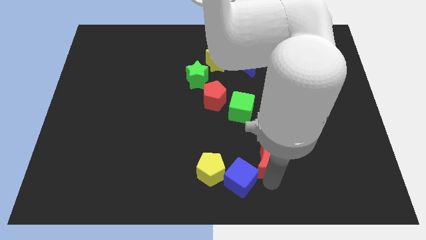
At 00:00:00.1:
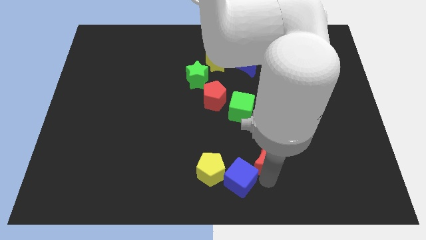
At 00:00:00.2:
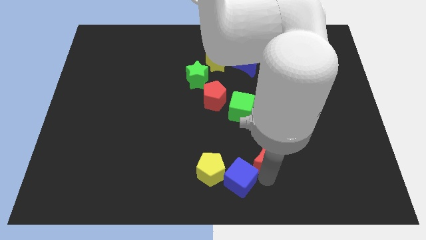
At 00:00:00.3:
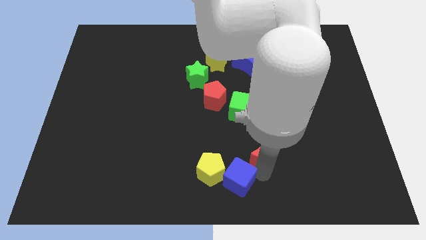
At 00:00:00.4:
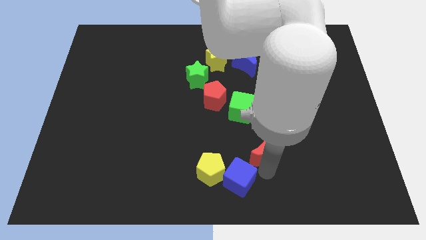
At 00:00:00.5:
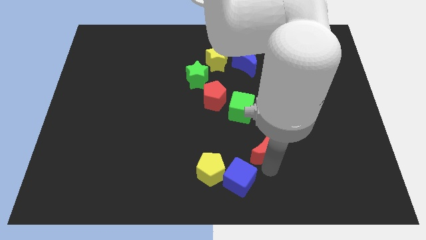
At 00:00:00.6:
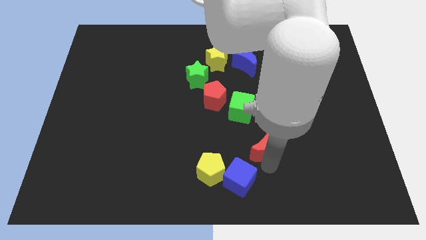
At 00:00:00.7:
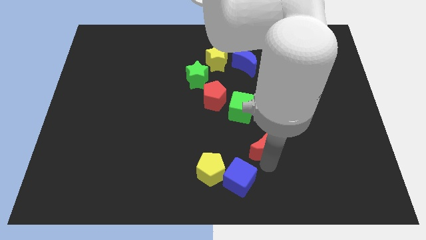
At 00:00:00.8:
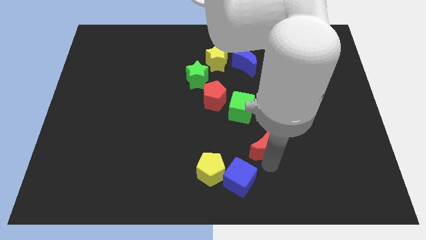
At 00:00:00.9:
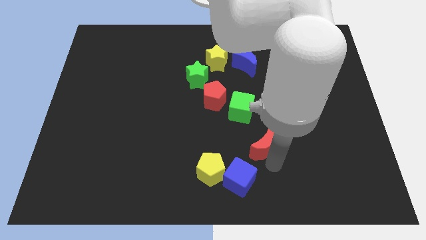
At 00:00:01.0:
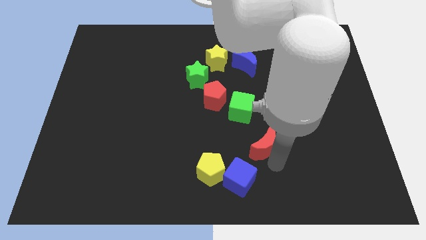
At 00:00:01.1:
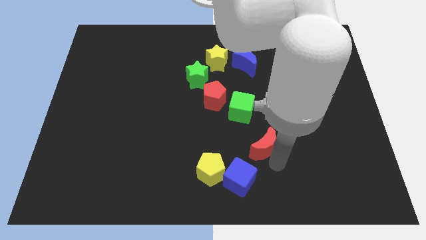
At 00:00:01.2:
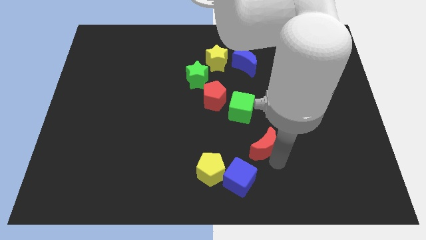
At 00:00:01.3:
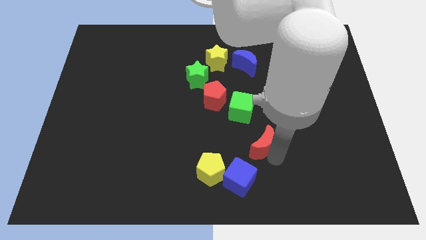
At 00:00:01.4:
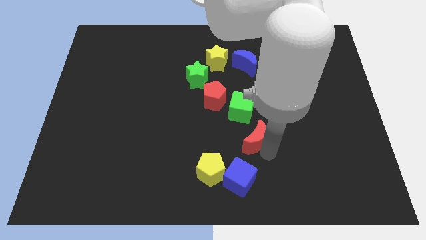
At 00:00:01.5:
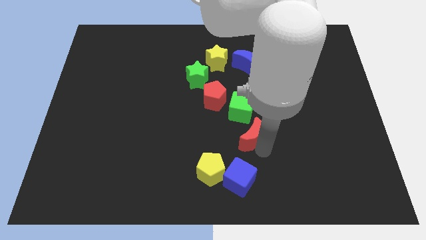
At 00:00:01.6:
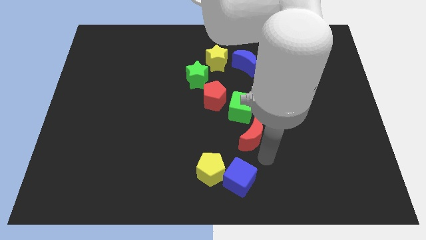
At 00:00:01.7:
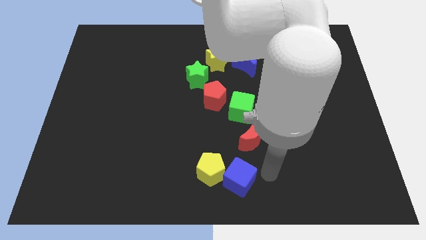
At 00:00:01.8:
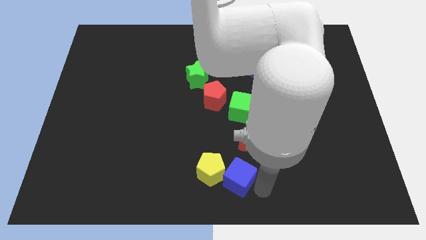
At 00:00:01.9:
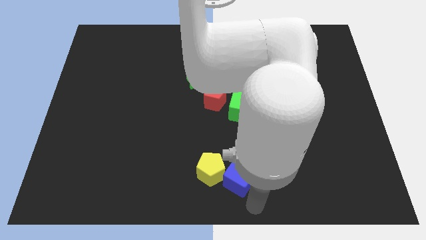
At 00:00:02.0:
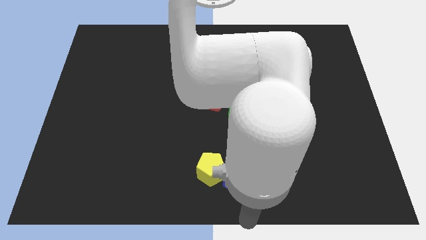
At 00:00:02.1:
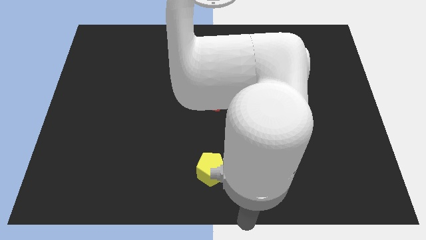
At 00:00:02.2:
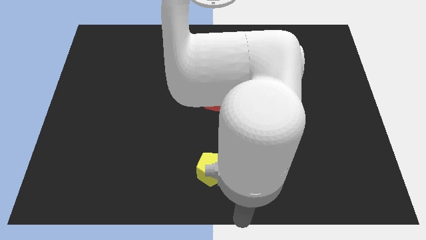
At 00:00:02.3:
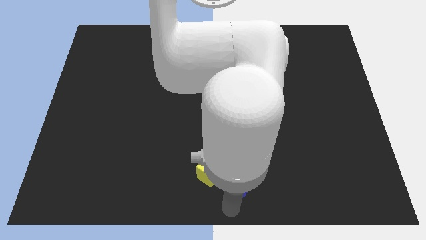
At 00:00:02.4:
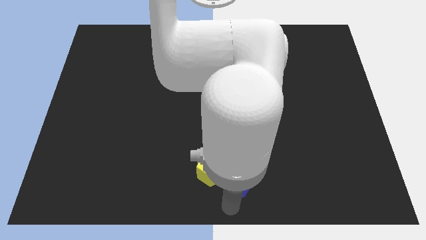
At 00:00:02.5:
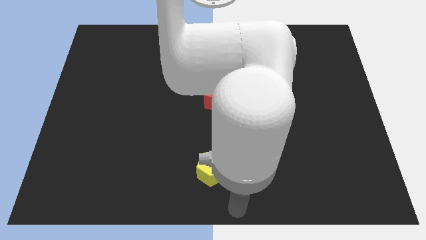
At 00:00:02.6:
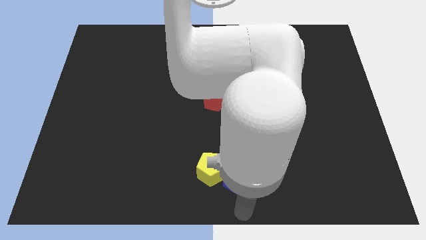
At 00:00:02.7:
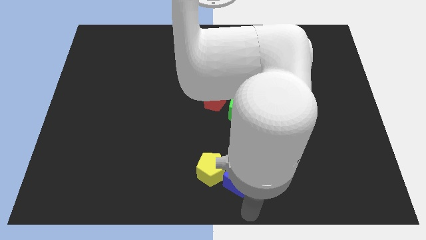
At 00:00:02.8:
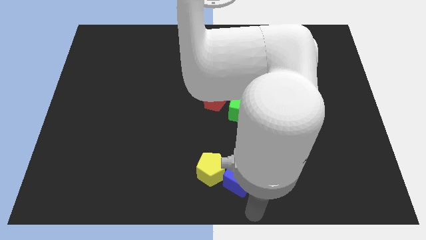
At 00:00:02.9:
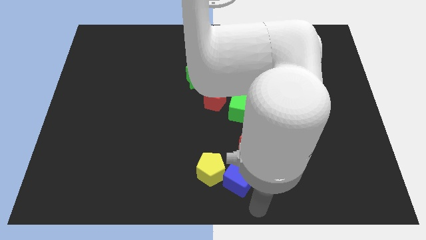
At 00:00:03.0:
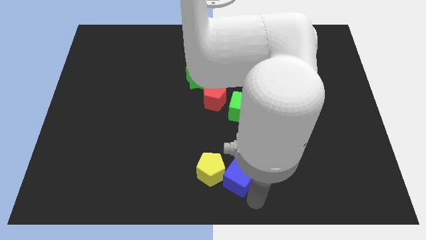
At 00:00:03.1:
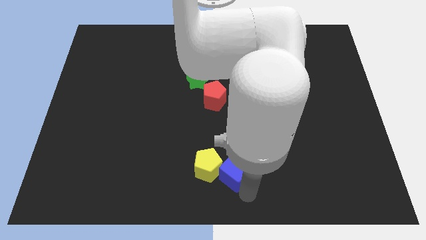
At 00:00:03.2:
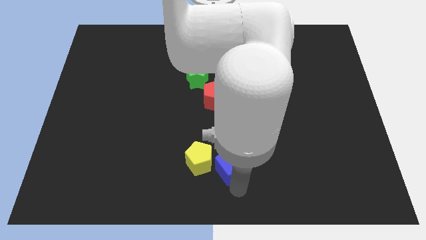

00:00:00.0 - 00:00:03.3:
point your arm near blue cube

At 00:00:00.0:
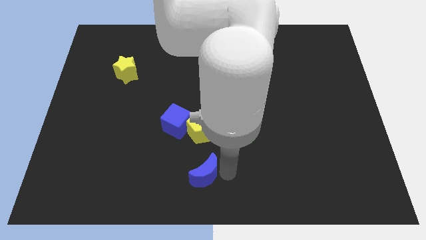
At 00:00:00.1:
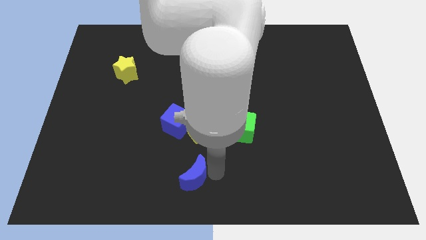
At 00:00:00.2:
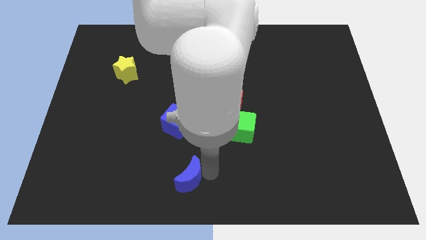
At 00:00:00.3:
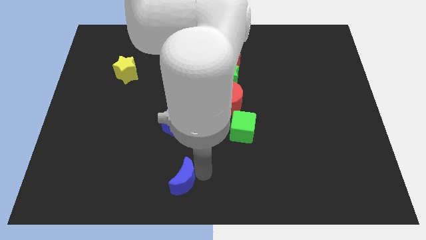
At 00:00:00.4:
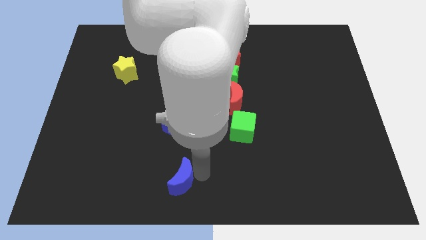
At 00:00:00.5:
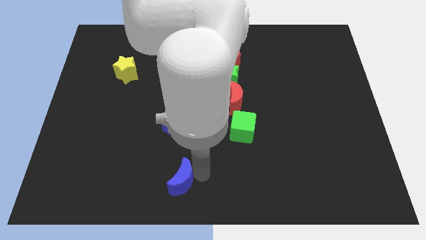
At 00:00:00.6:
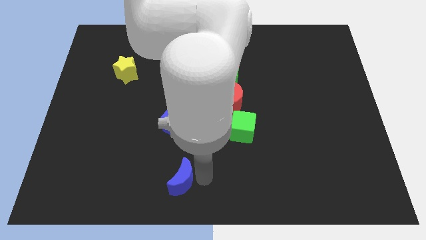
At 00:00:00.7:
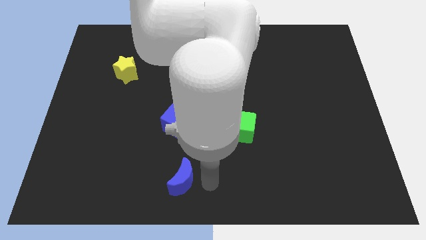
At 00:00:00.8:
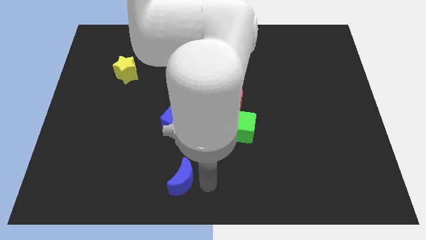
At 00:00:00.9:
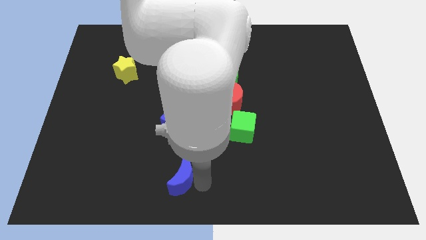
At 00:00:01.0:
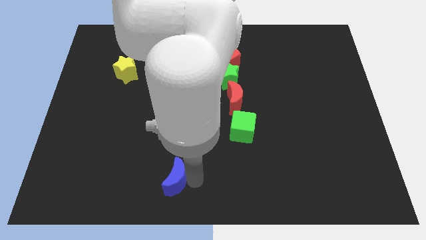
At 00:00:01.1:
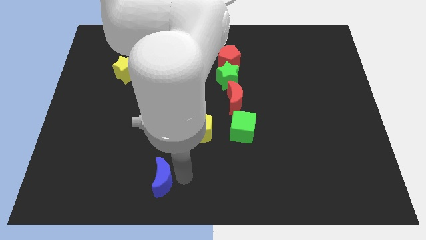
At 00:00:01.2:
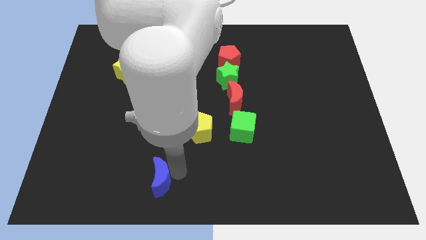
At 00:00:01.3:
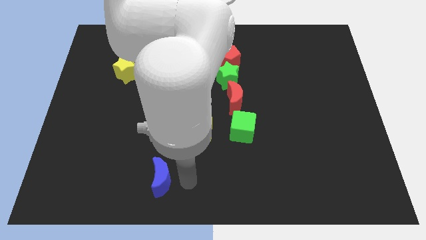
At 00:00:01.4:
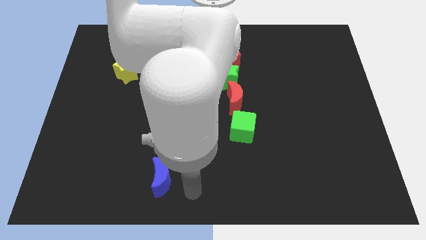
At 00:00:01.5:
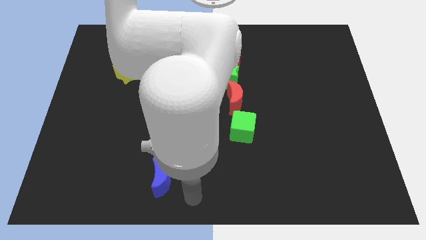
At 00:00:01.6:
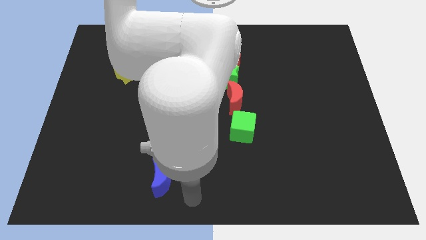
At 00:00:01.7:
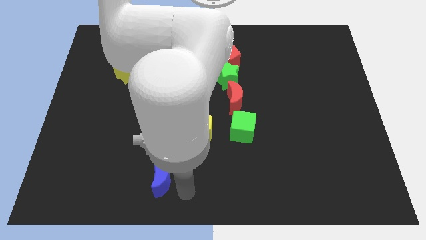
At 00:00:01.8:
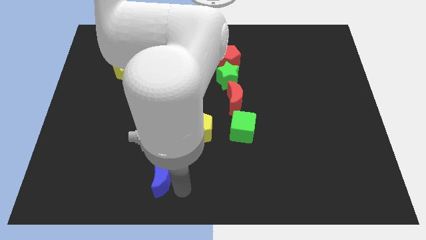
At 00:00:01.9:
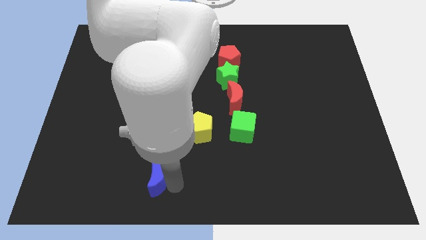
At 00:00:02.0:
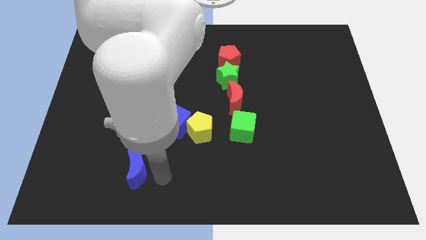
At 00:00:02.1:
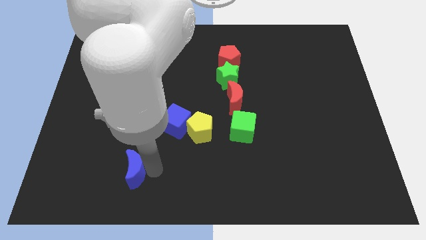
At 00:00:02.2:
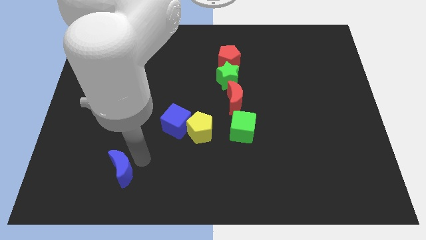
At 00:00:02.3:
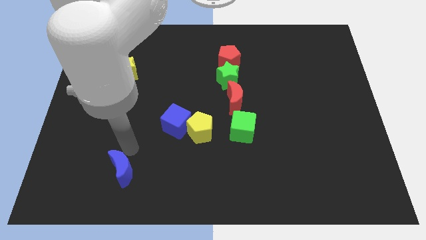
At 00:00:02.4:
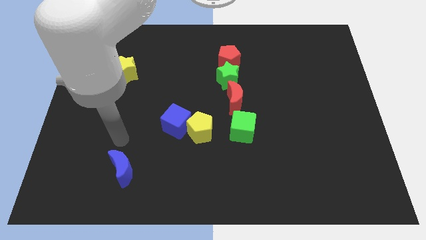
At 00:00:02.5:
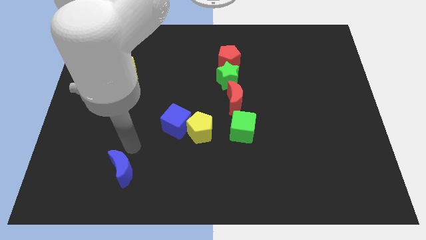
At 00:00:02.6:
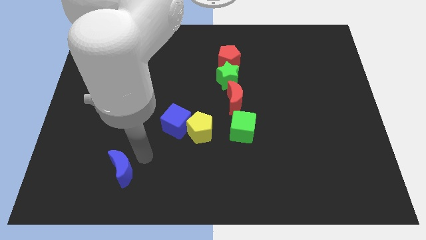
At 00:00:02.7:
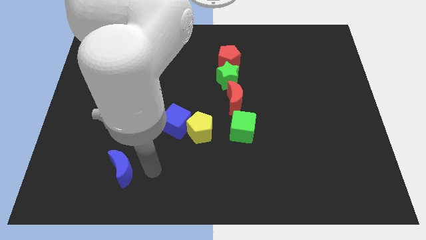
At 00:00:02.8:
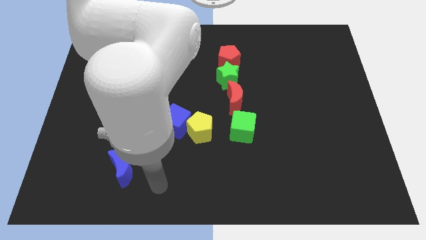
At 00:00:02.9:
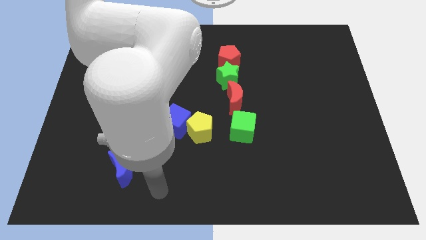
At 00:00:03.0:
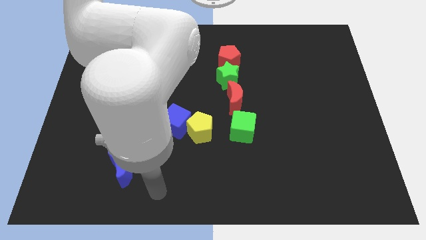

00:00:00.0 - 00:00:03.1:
push blue crescent below yellow star

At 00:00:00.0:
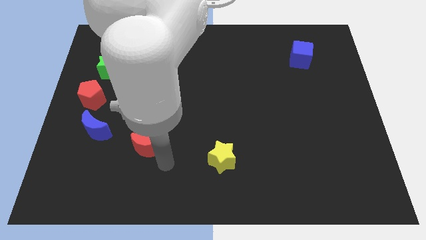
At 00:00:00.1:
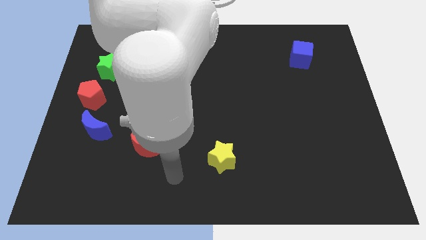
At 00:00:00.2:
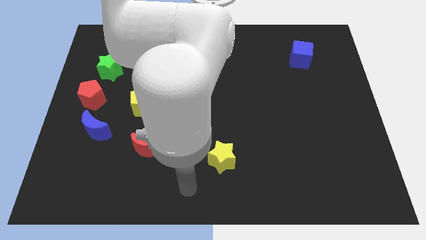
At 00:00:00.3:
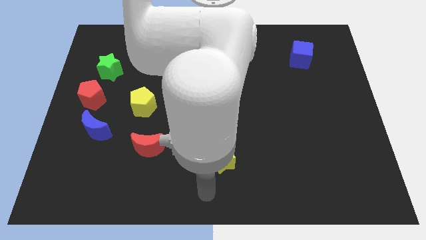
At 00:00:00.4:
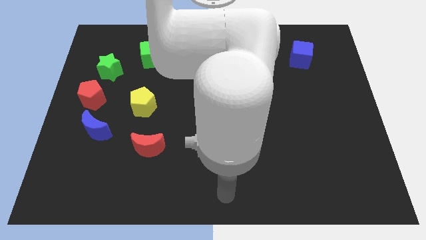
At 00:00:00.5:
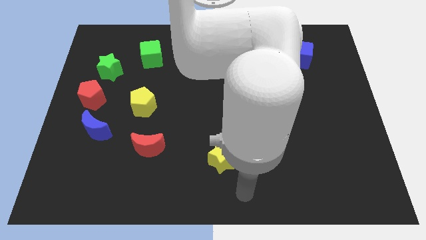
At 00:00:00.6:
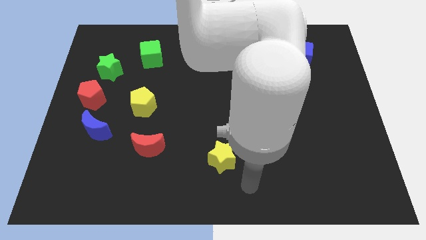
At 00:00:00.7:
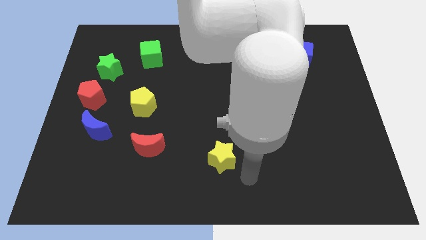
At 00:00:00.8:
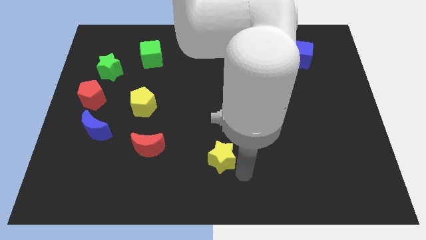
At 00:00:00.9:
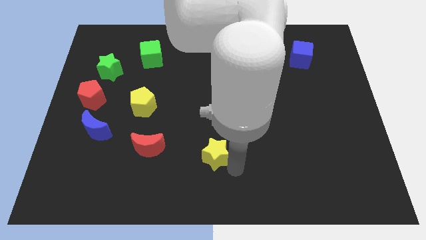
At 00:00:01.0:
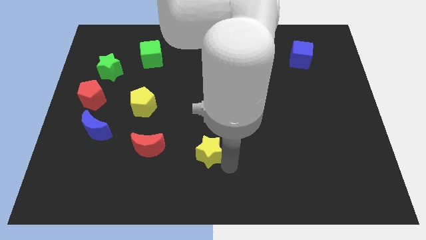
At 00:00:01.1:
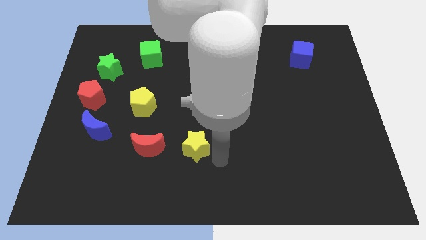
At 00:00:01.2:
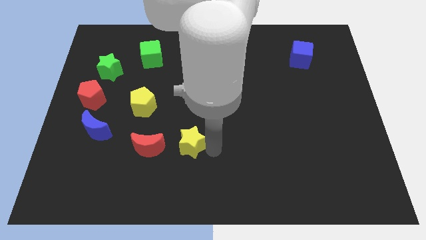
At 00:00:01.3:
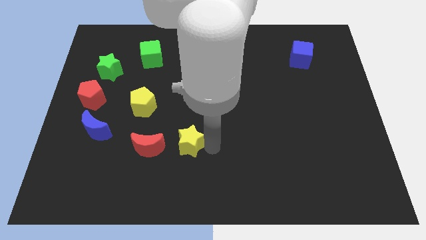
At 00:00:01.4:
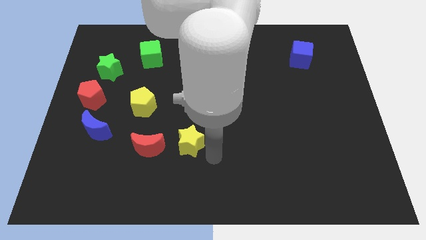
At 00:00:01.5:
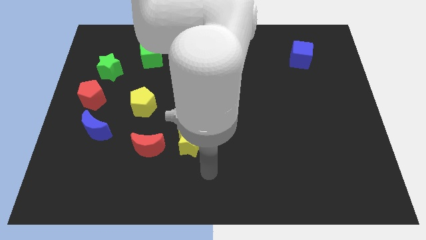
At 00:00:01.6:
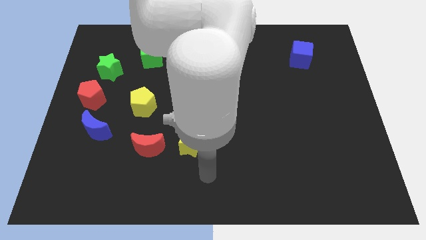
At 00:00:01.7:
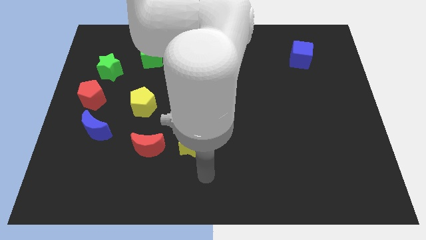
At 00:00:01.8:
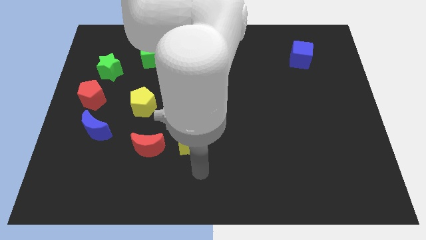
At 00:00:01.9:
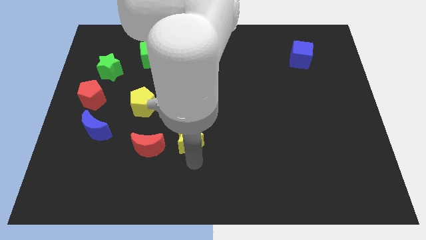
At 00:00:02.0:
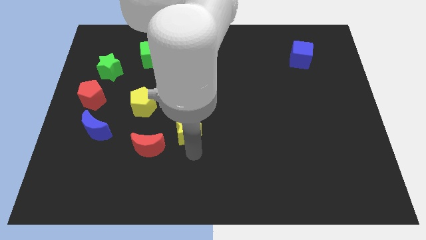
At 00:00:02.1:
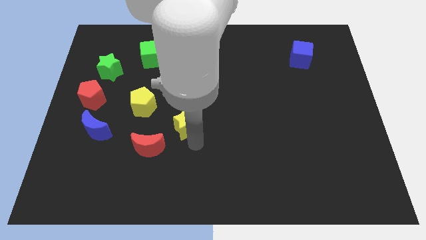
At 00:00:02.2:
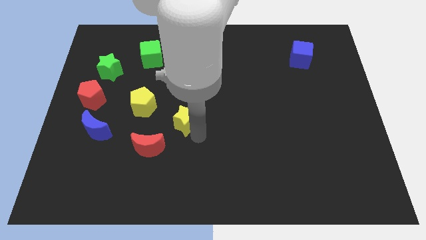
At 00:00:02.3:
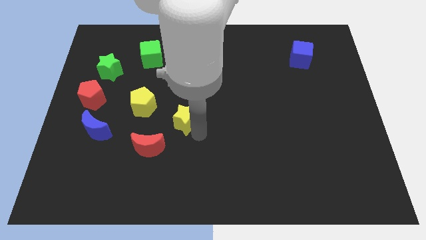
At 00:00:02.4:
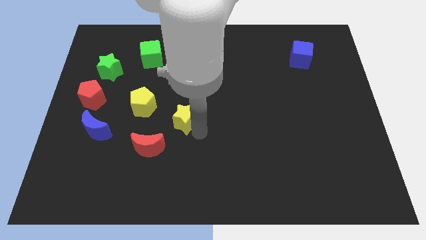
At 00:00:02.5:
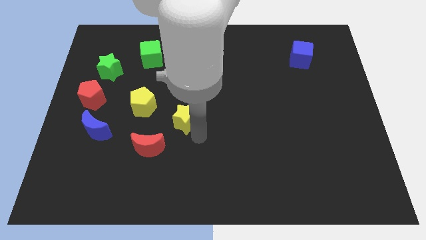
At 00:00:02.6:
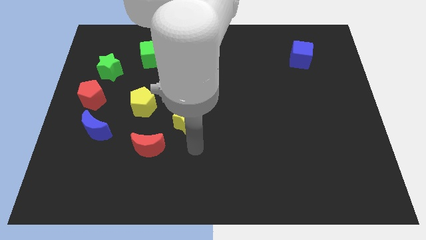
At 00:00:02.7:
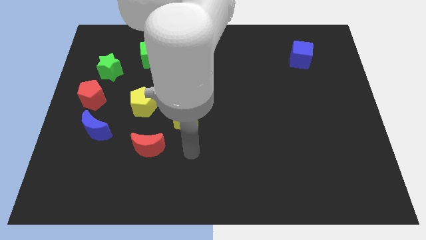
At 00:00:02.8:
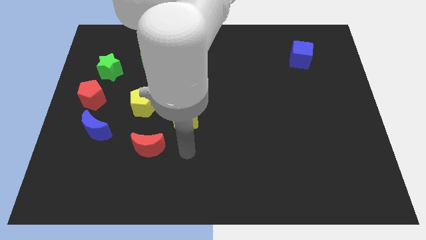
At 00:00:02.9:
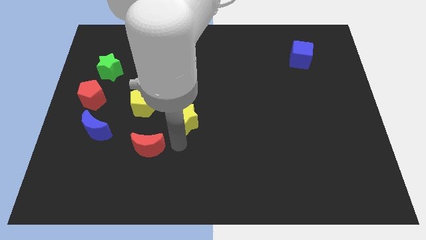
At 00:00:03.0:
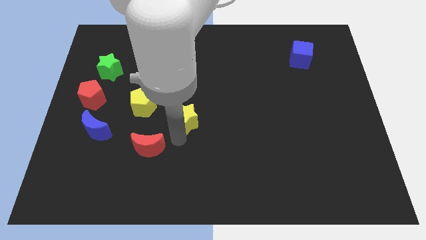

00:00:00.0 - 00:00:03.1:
place yellow star to the center
